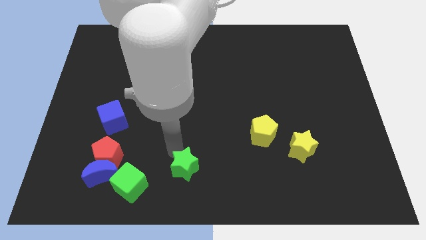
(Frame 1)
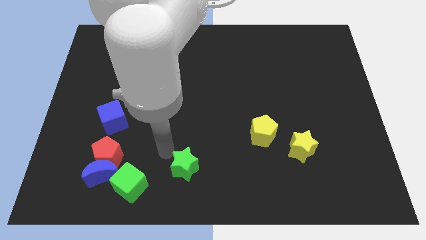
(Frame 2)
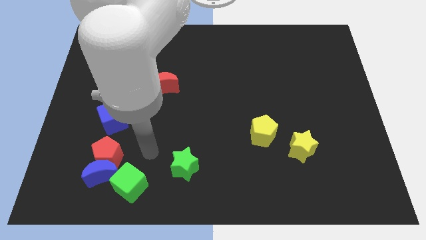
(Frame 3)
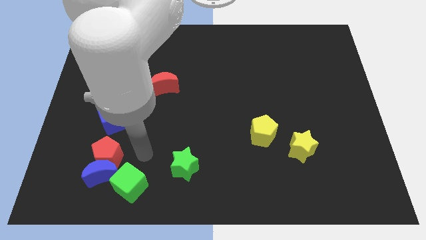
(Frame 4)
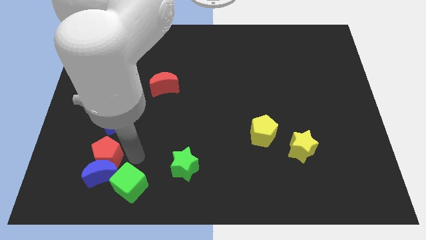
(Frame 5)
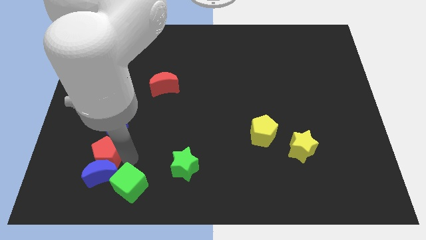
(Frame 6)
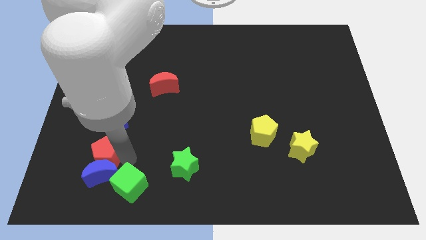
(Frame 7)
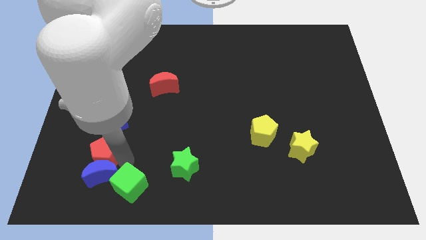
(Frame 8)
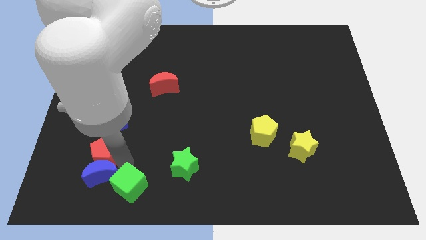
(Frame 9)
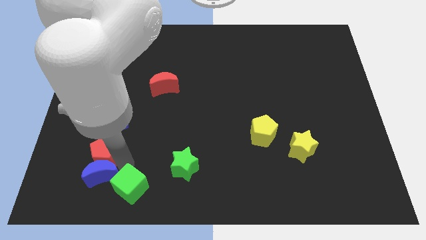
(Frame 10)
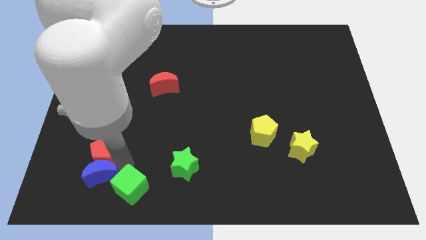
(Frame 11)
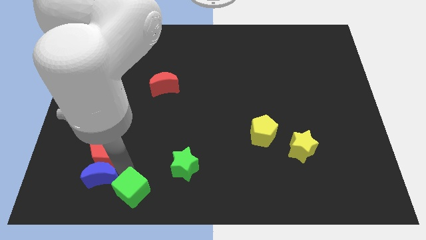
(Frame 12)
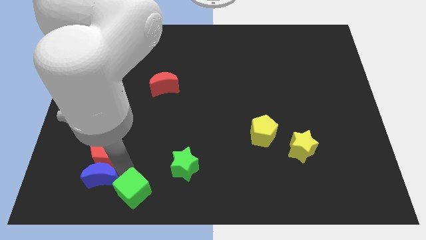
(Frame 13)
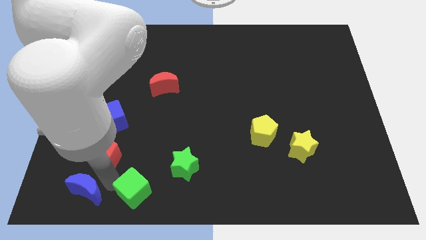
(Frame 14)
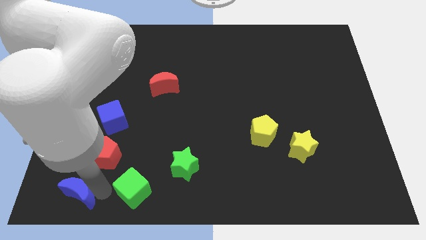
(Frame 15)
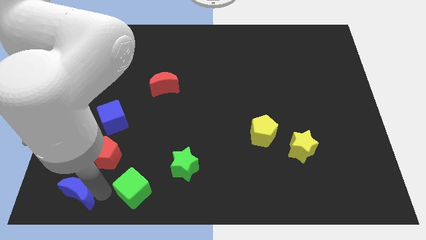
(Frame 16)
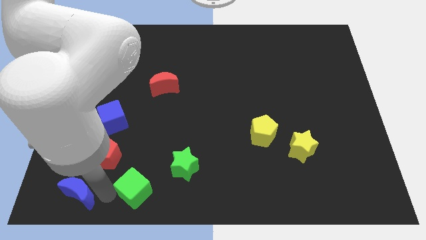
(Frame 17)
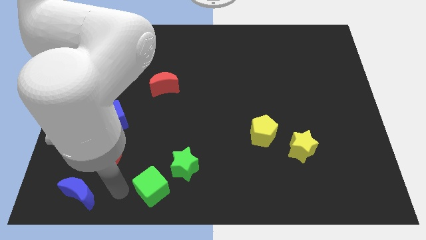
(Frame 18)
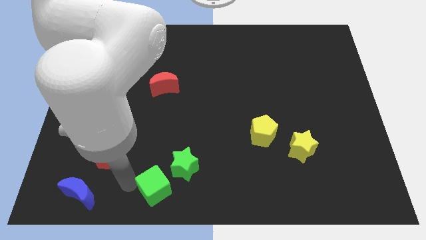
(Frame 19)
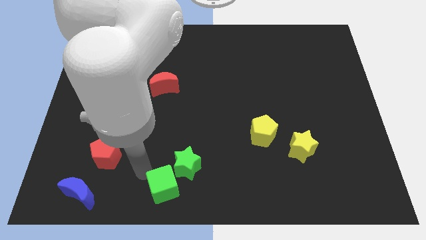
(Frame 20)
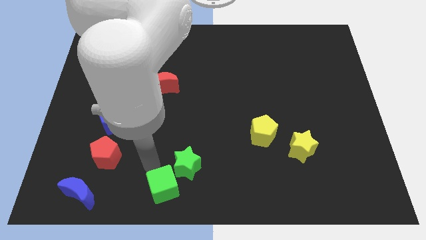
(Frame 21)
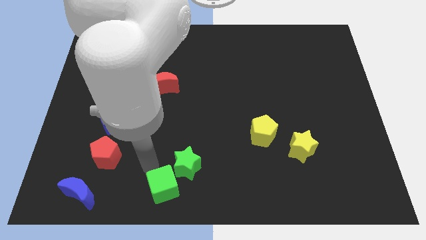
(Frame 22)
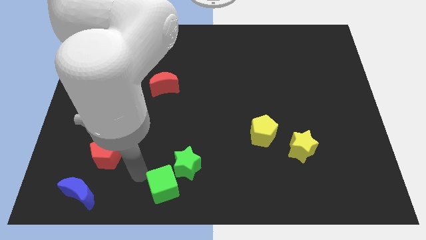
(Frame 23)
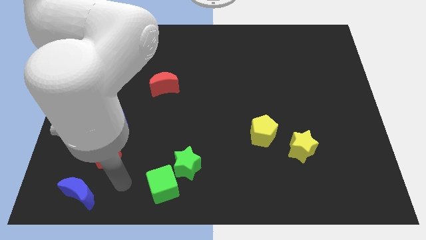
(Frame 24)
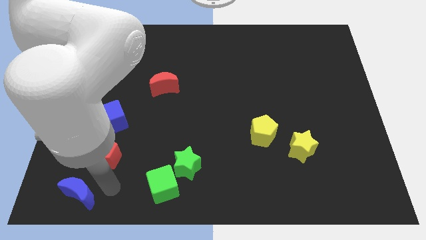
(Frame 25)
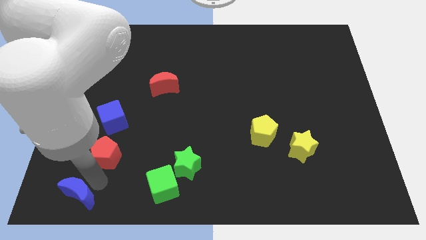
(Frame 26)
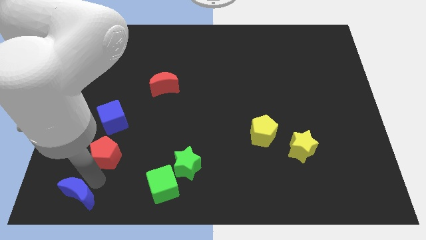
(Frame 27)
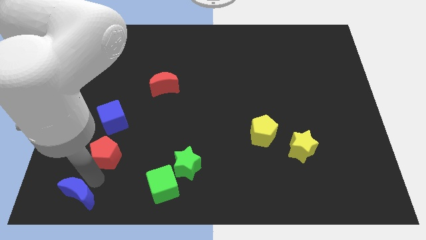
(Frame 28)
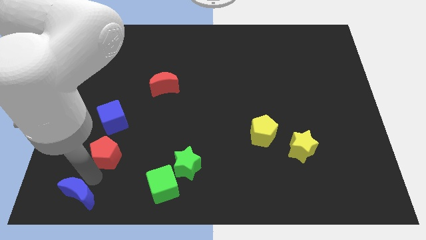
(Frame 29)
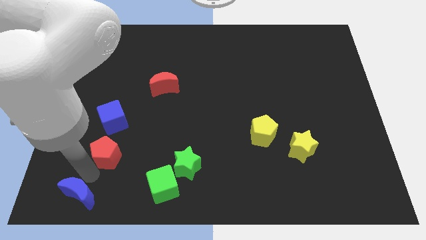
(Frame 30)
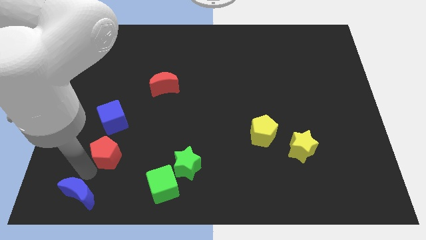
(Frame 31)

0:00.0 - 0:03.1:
push the green cube to the bottom left of the green star

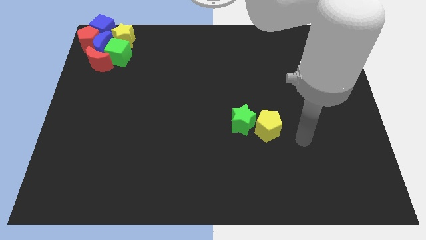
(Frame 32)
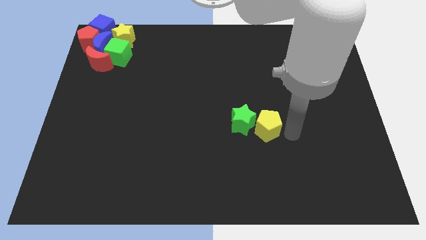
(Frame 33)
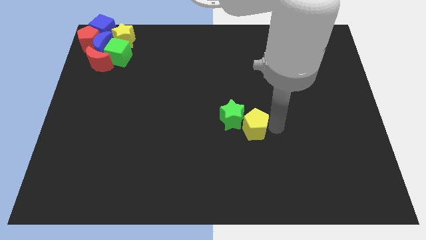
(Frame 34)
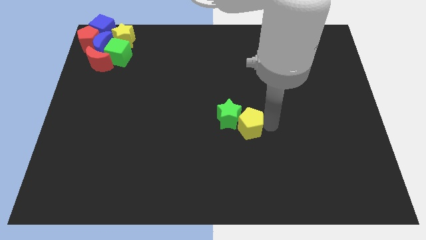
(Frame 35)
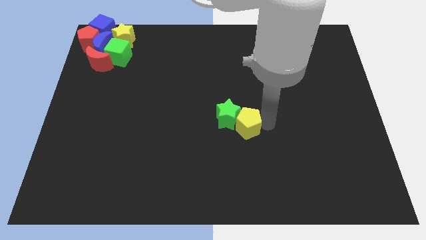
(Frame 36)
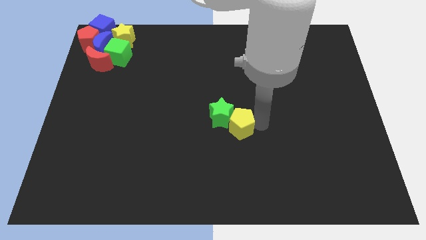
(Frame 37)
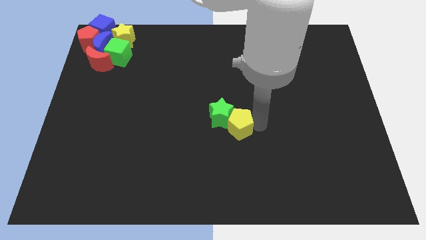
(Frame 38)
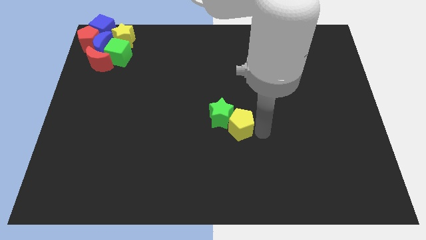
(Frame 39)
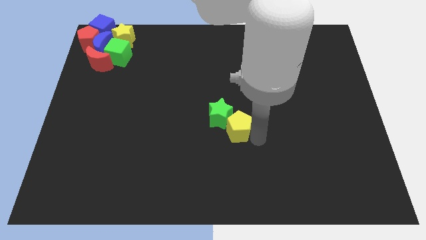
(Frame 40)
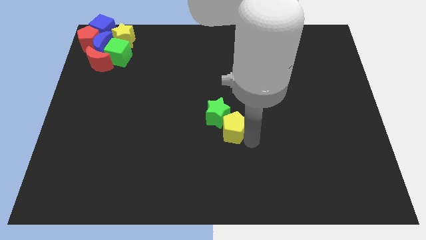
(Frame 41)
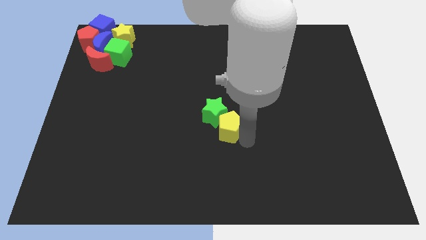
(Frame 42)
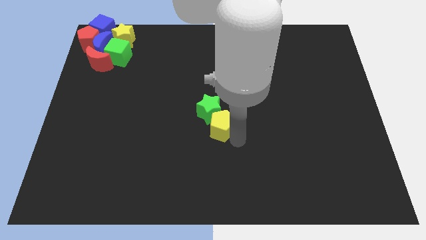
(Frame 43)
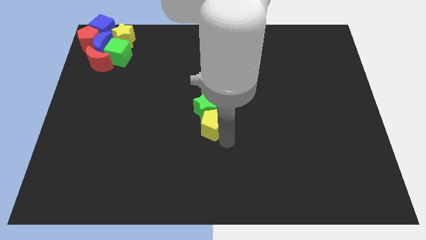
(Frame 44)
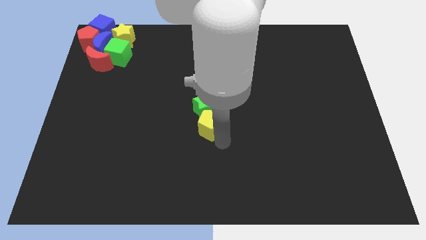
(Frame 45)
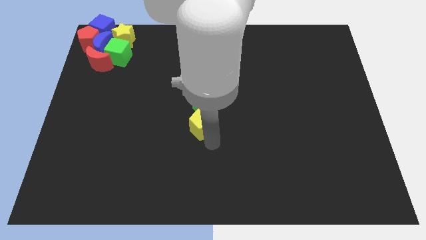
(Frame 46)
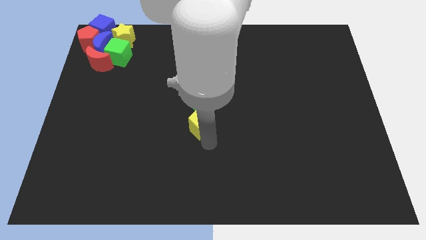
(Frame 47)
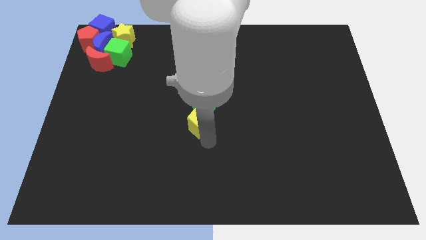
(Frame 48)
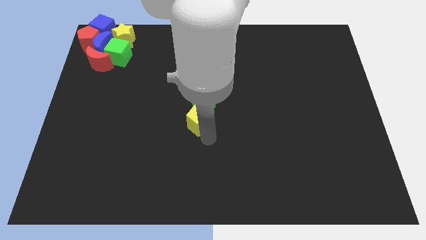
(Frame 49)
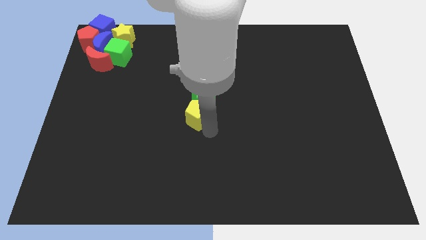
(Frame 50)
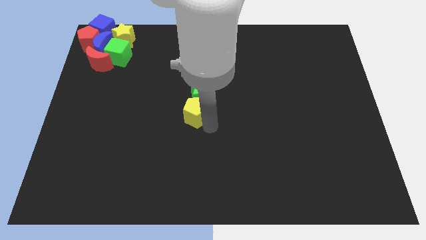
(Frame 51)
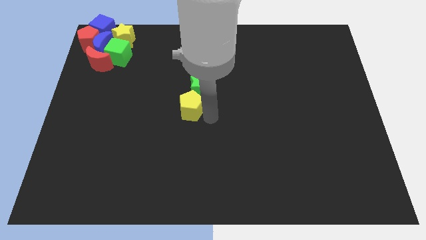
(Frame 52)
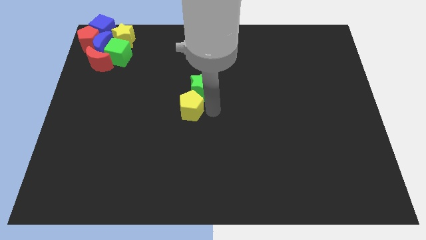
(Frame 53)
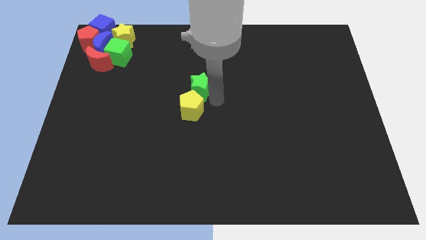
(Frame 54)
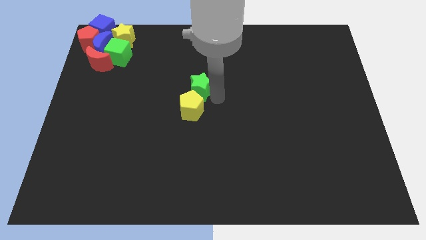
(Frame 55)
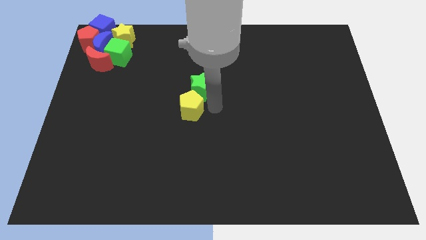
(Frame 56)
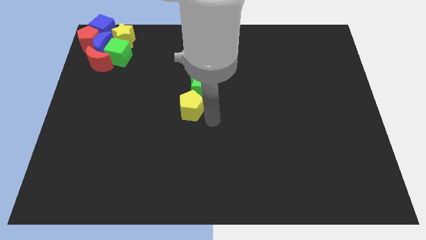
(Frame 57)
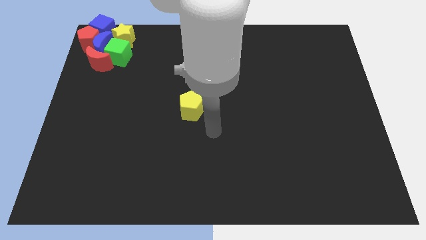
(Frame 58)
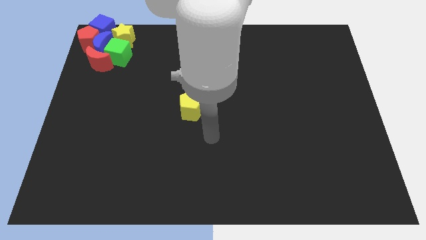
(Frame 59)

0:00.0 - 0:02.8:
move the yellow pentagon at the bottom of the green cube

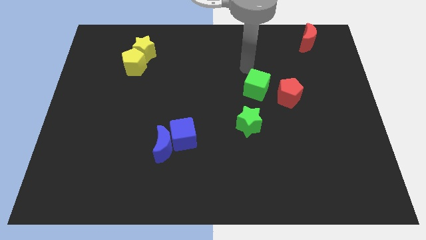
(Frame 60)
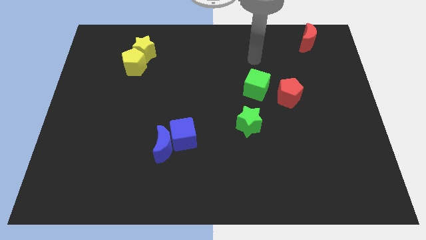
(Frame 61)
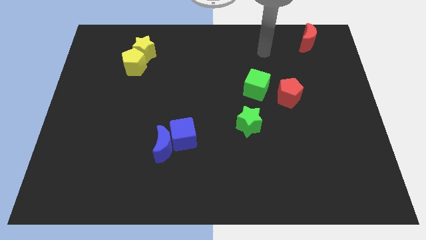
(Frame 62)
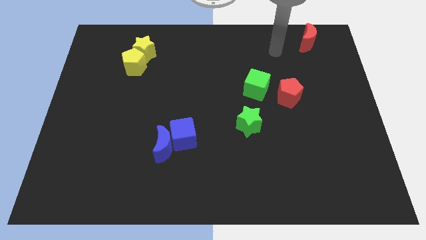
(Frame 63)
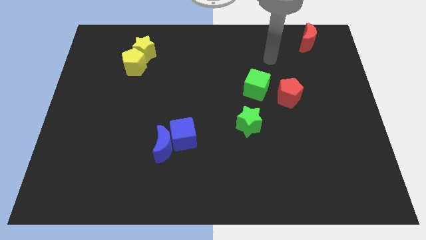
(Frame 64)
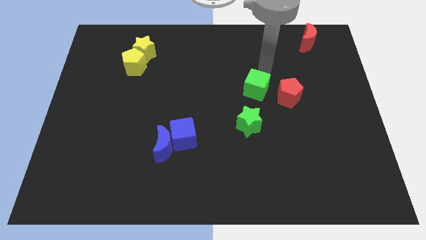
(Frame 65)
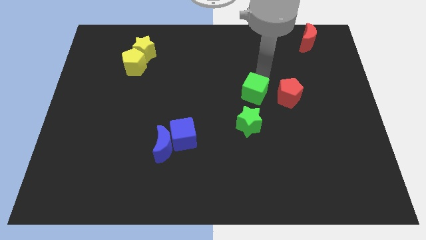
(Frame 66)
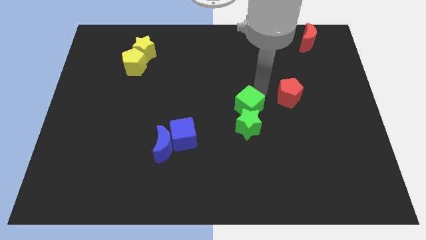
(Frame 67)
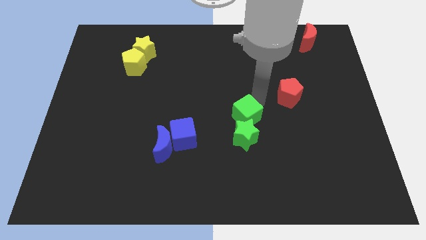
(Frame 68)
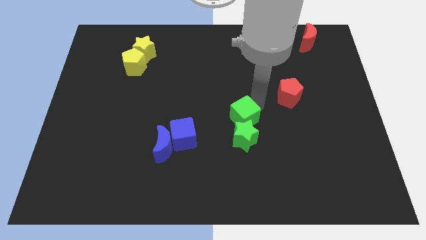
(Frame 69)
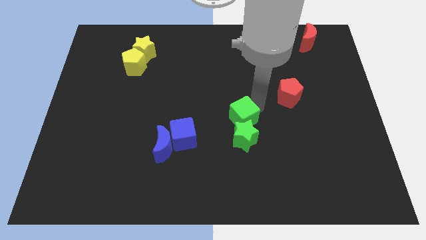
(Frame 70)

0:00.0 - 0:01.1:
push green cube into the green star

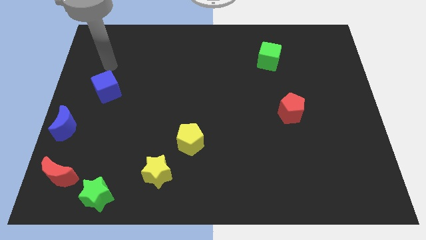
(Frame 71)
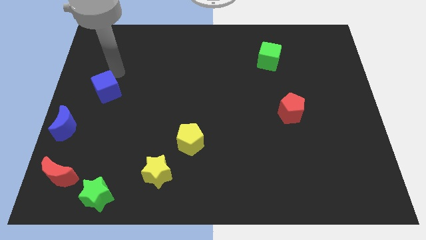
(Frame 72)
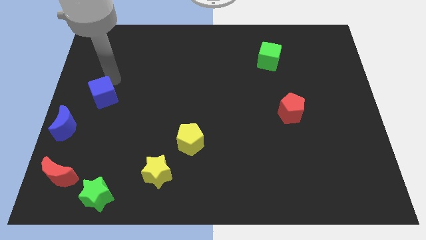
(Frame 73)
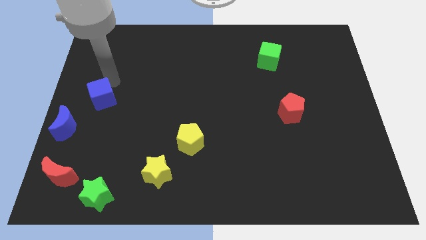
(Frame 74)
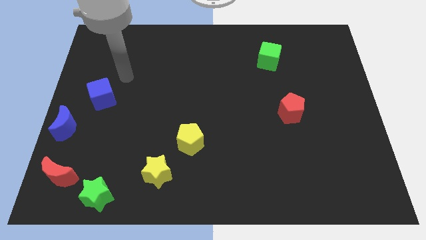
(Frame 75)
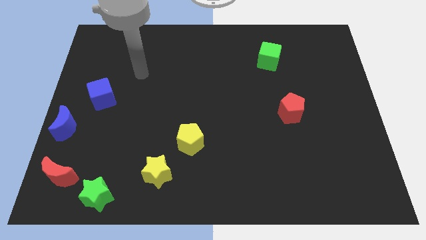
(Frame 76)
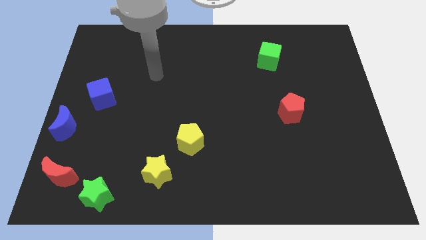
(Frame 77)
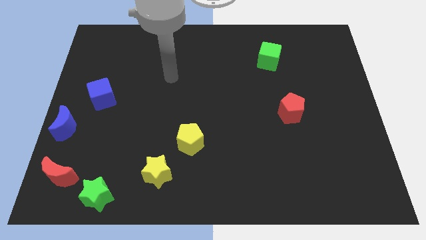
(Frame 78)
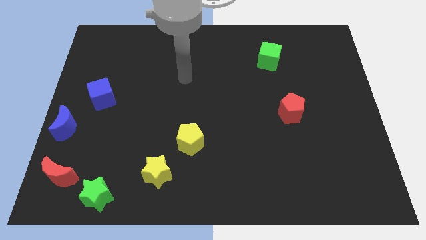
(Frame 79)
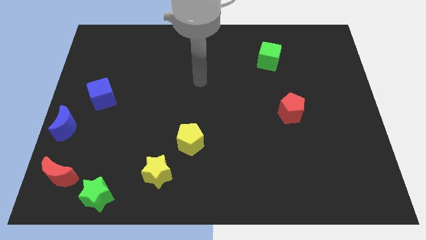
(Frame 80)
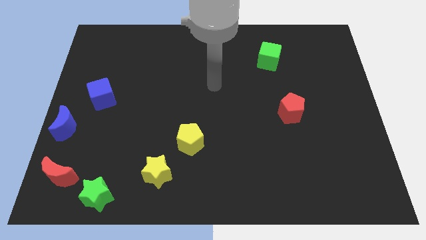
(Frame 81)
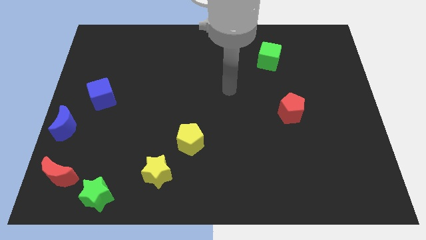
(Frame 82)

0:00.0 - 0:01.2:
push the blue cube towards the blue crescent

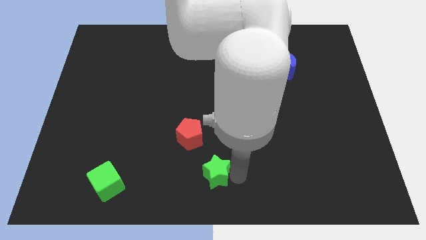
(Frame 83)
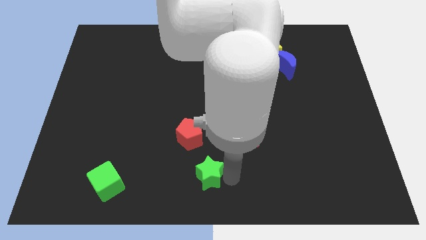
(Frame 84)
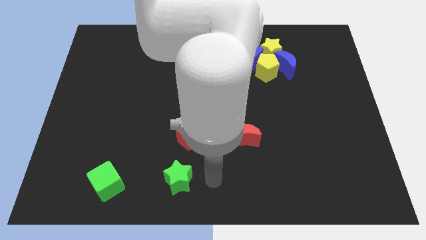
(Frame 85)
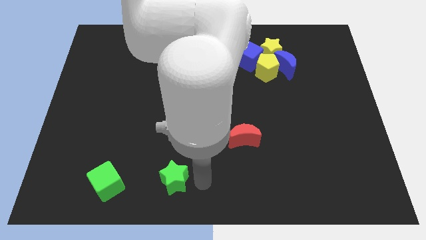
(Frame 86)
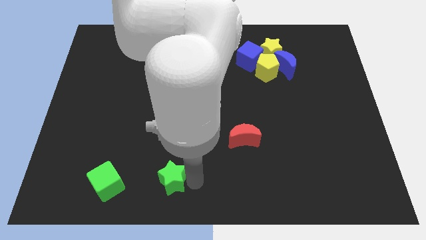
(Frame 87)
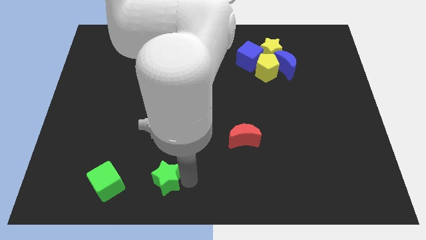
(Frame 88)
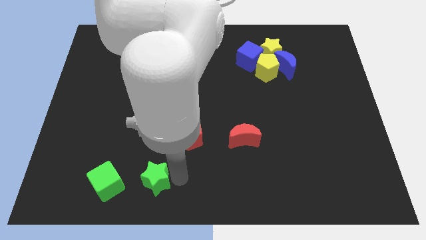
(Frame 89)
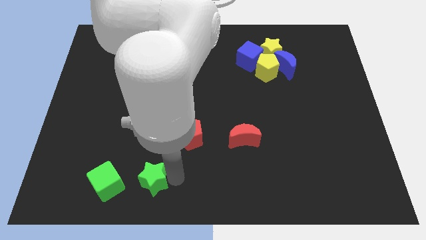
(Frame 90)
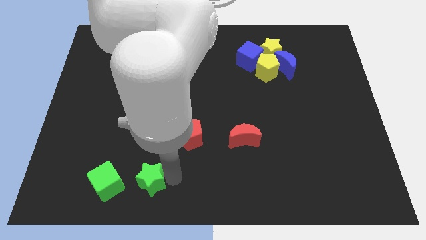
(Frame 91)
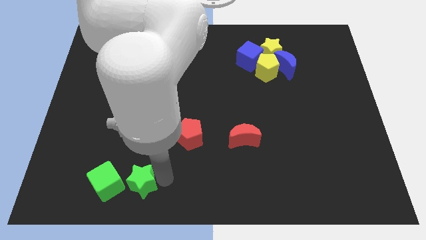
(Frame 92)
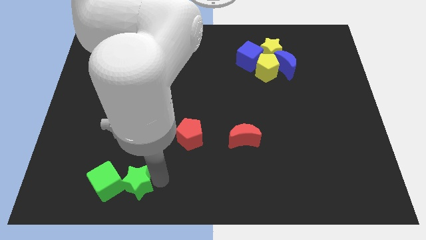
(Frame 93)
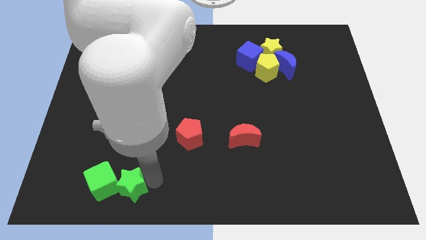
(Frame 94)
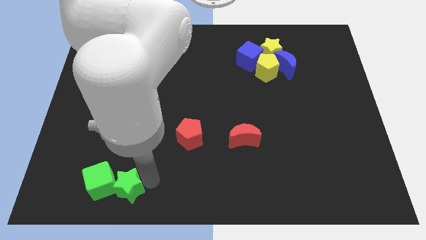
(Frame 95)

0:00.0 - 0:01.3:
place green star to the right side of green cube
